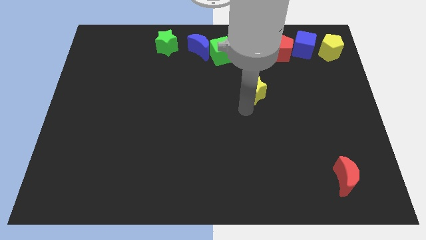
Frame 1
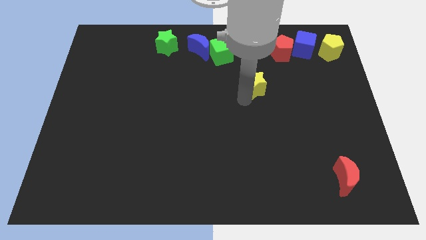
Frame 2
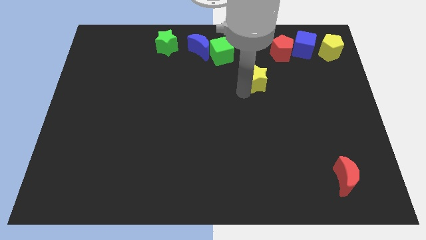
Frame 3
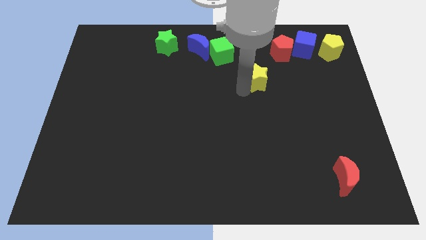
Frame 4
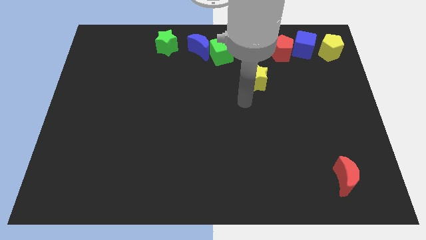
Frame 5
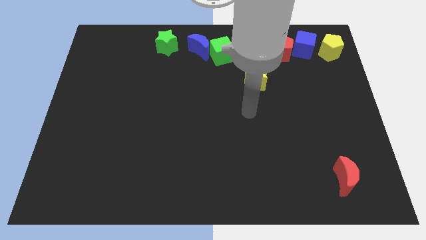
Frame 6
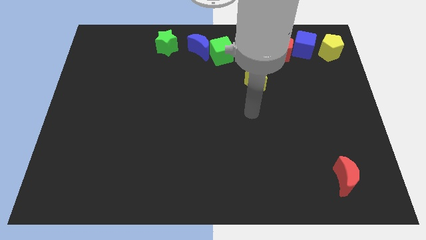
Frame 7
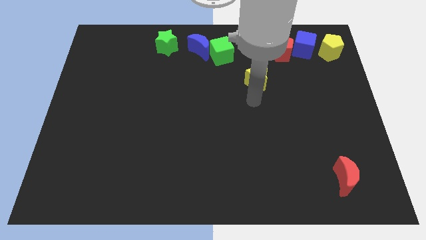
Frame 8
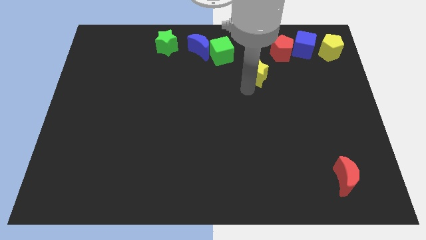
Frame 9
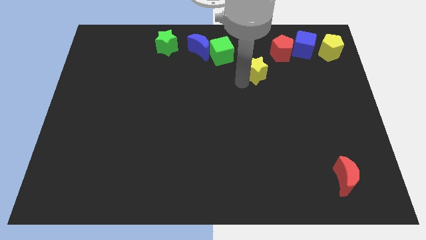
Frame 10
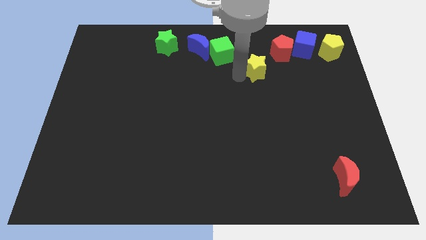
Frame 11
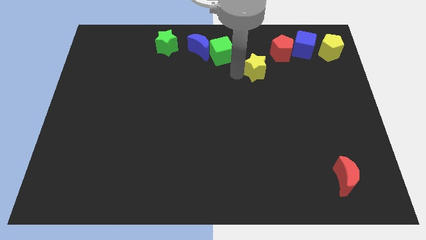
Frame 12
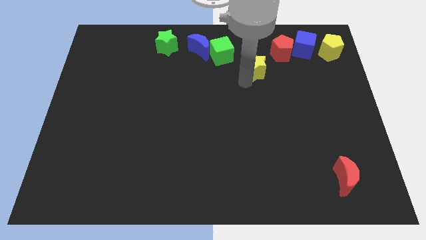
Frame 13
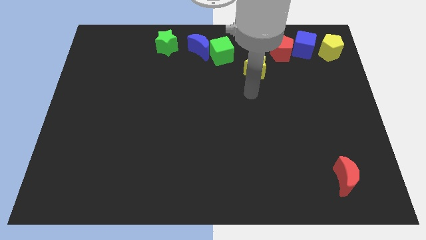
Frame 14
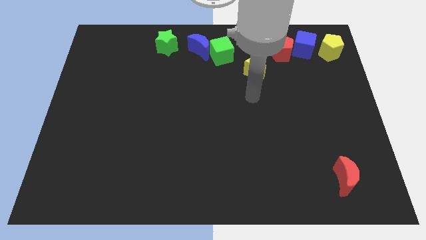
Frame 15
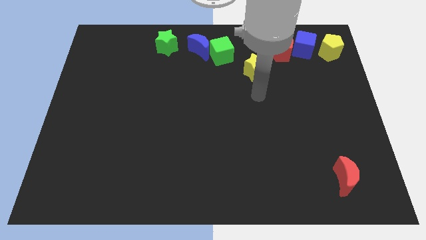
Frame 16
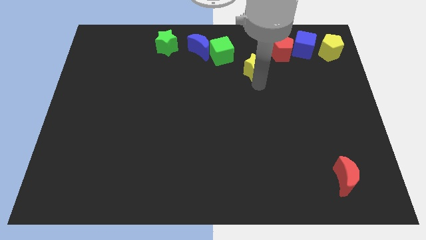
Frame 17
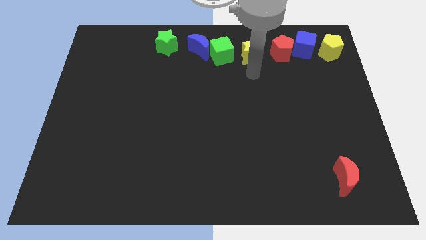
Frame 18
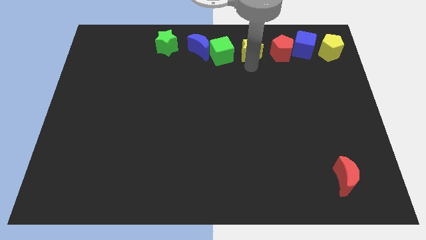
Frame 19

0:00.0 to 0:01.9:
place the yellow star between the red pentagon and green cube

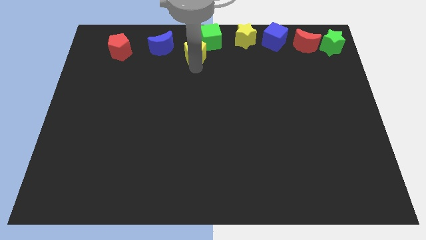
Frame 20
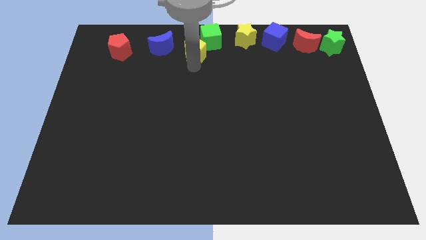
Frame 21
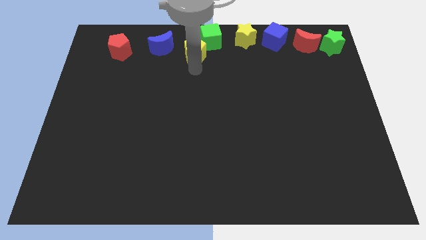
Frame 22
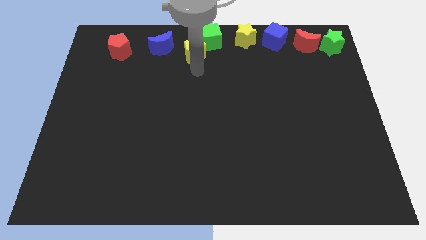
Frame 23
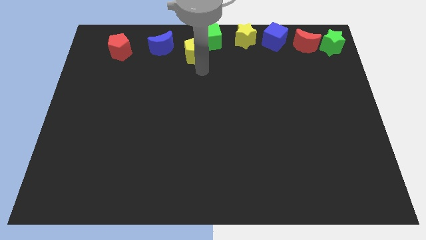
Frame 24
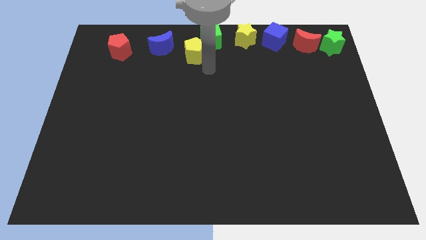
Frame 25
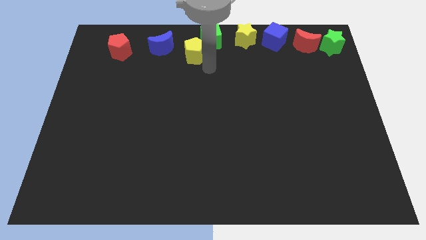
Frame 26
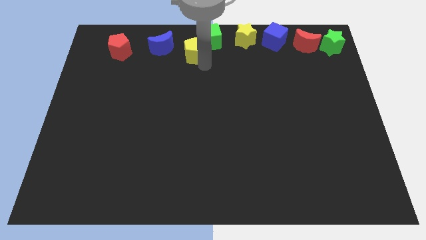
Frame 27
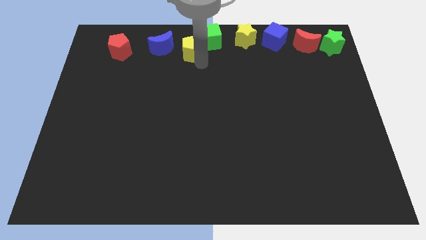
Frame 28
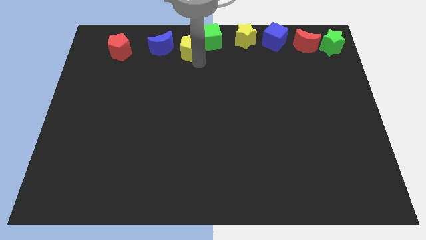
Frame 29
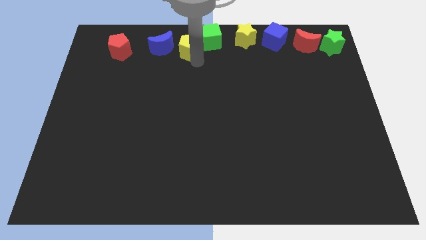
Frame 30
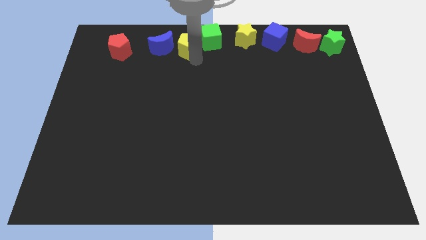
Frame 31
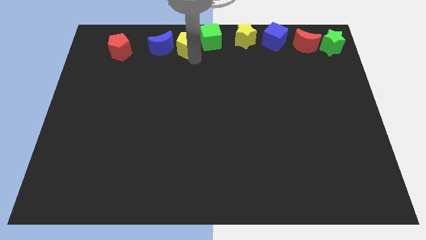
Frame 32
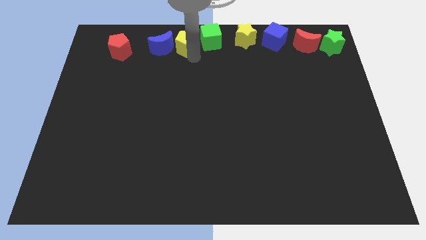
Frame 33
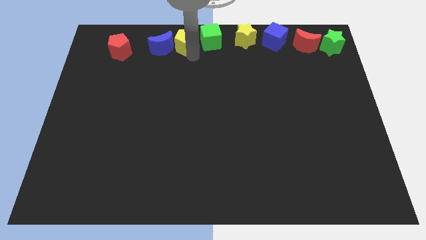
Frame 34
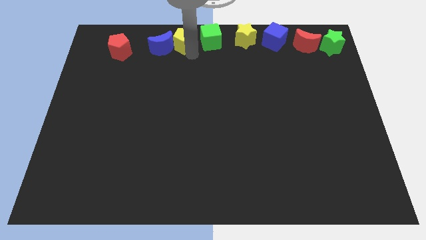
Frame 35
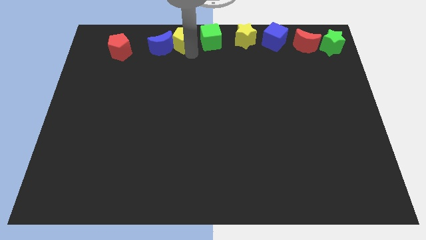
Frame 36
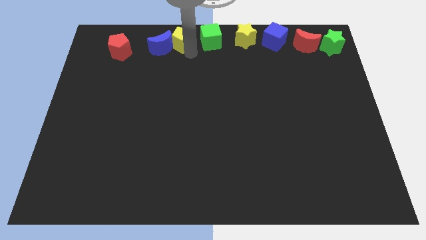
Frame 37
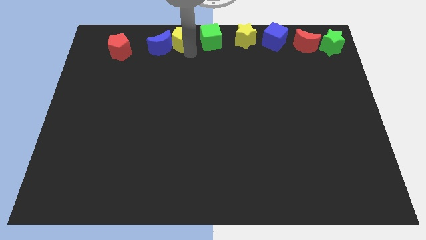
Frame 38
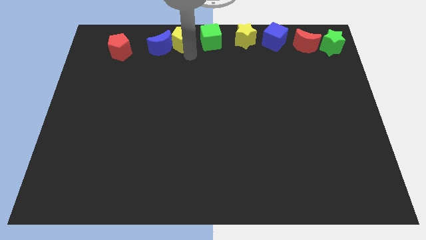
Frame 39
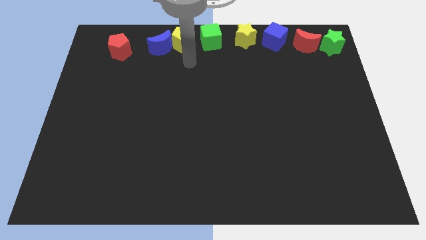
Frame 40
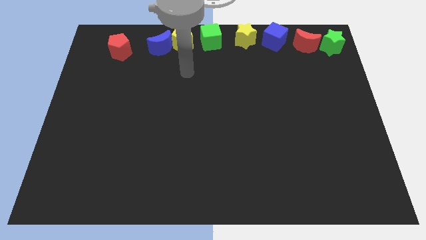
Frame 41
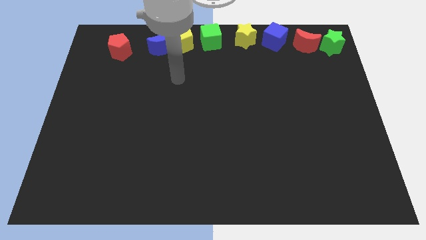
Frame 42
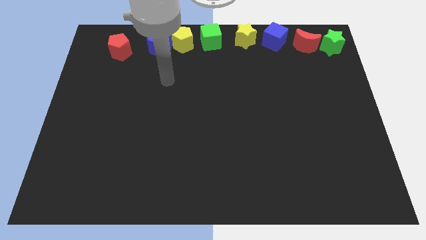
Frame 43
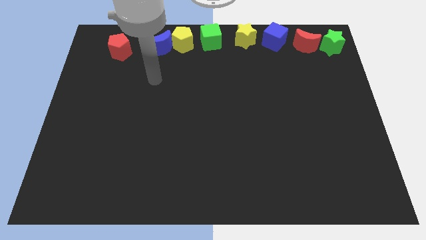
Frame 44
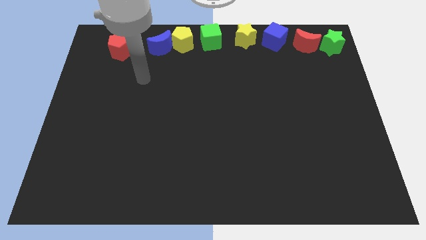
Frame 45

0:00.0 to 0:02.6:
place the yellow pentagon in between the green cube and the blue crescent

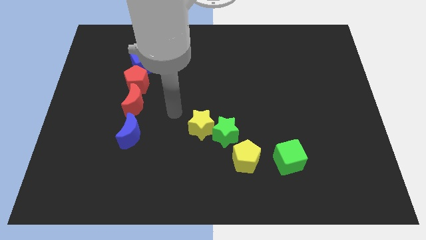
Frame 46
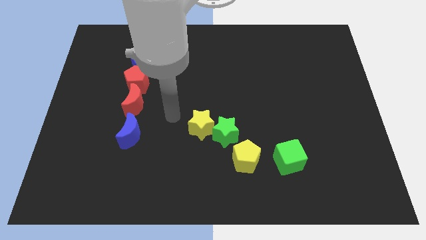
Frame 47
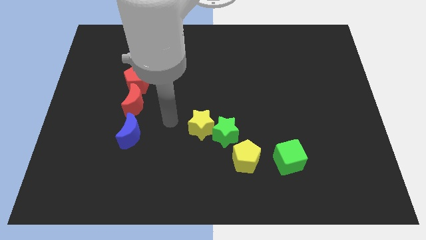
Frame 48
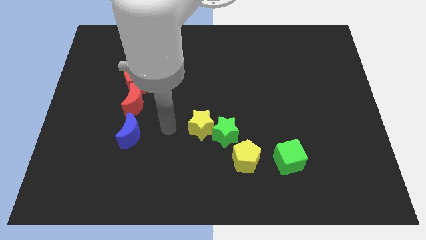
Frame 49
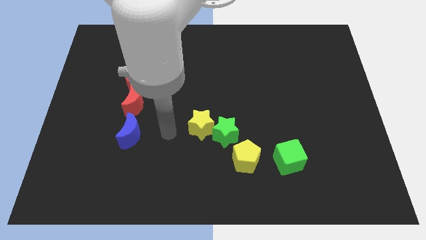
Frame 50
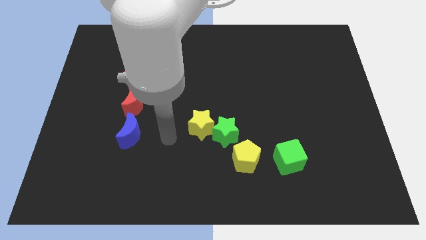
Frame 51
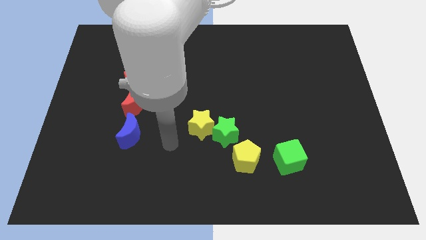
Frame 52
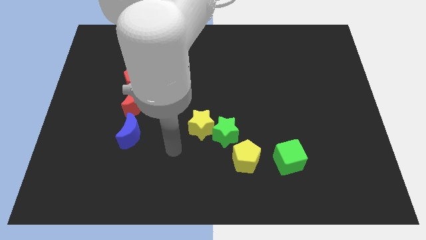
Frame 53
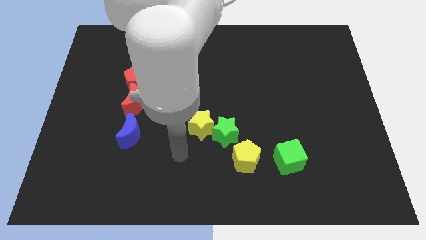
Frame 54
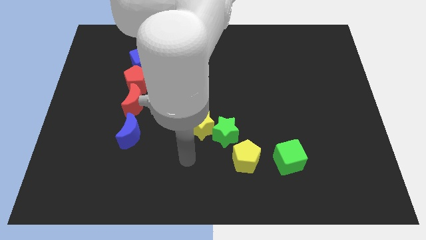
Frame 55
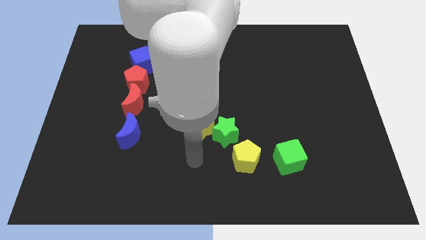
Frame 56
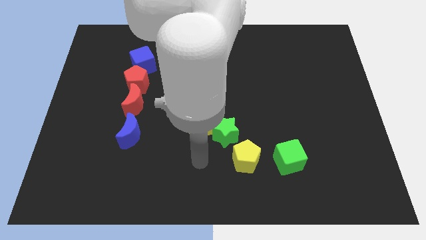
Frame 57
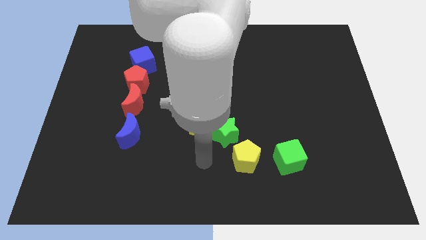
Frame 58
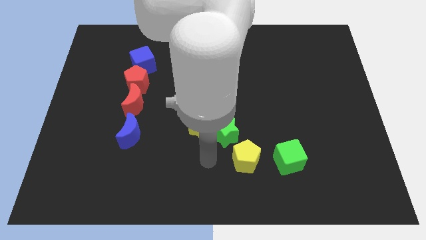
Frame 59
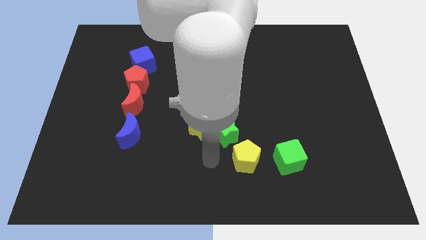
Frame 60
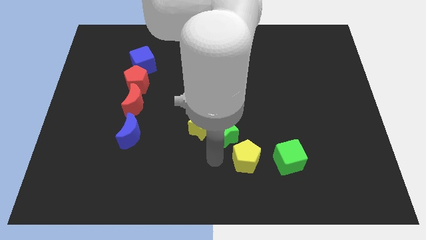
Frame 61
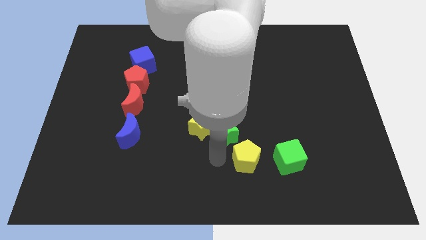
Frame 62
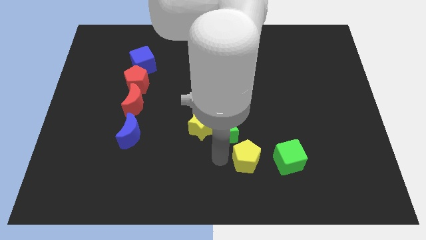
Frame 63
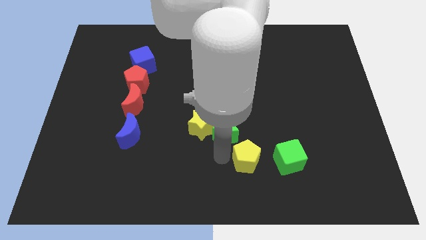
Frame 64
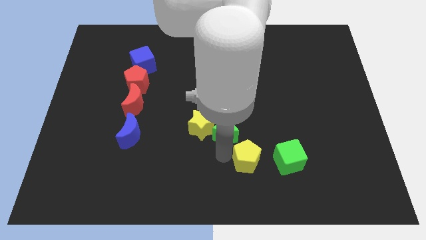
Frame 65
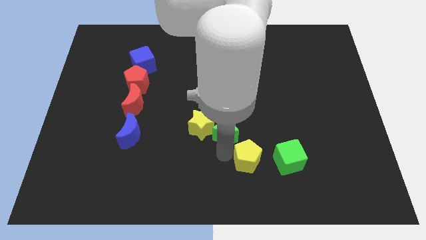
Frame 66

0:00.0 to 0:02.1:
tap the left side of the yellow pentagon

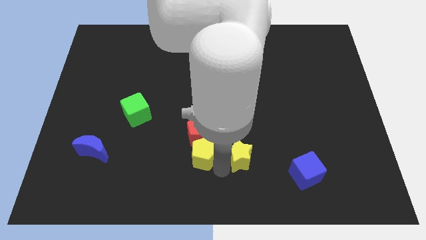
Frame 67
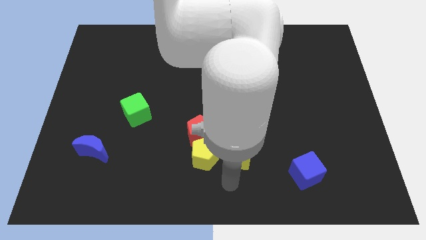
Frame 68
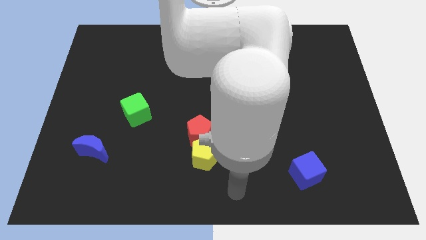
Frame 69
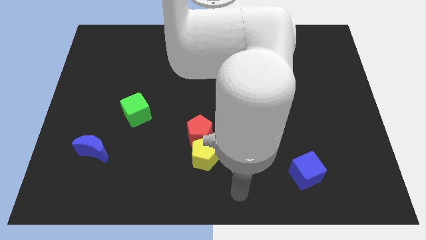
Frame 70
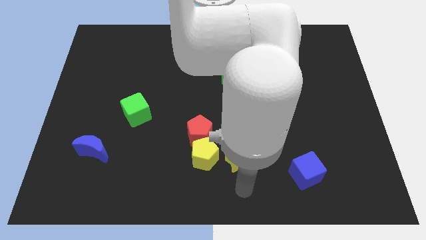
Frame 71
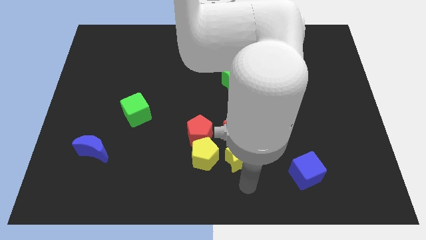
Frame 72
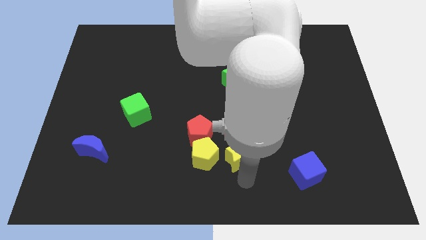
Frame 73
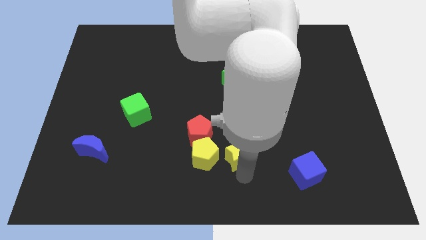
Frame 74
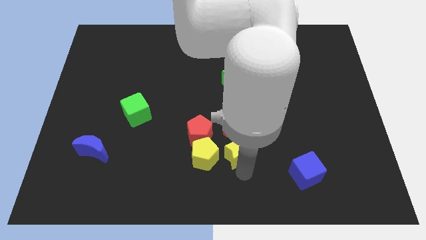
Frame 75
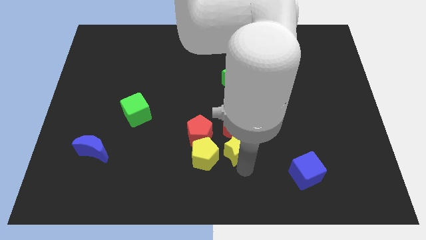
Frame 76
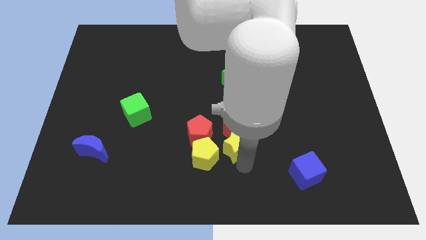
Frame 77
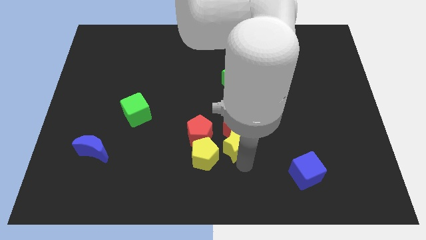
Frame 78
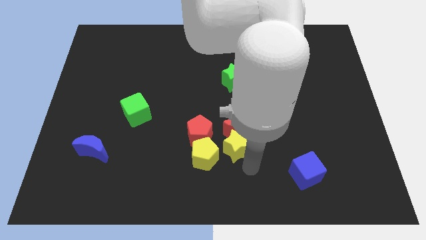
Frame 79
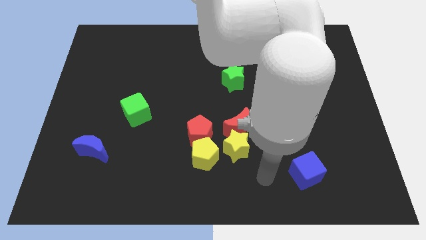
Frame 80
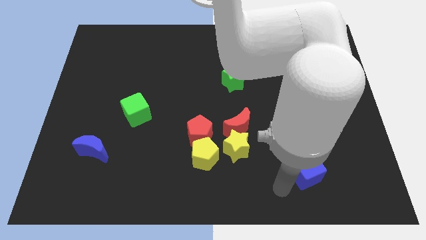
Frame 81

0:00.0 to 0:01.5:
put the yellow star underneath the red moon

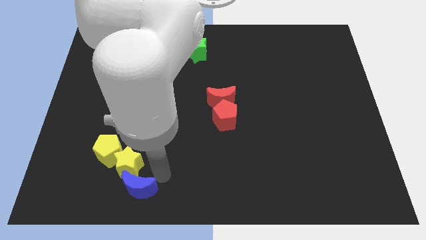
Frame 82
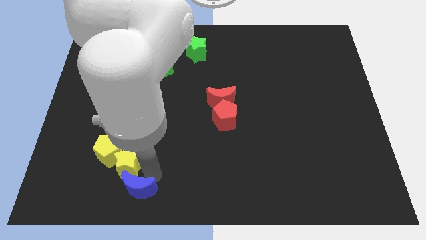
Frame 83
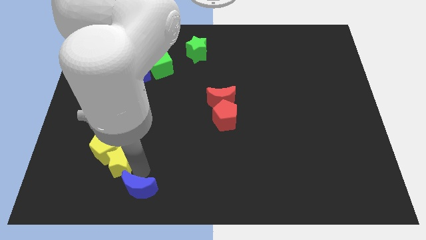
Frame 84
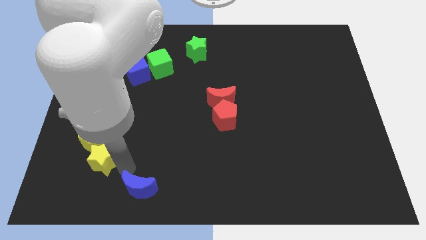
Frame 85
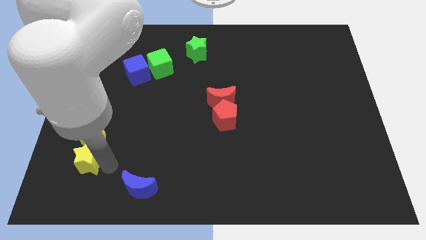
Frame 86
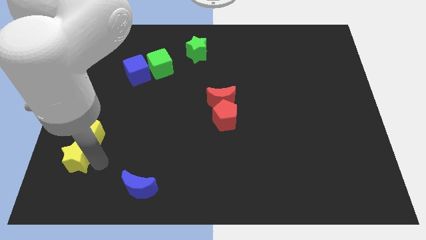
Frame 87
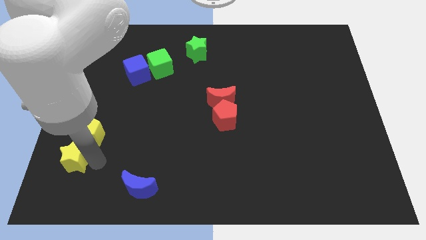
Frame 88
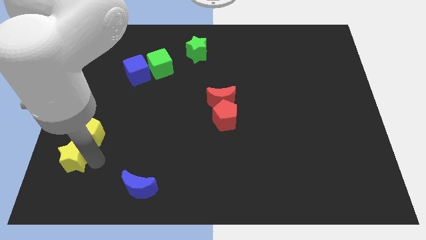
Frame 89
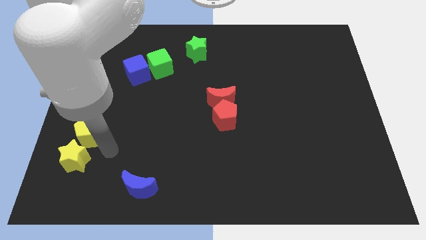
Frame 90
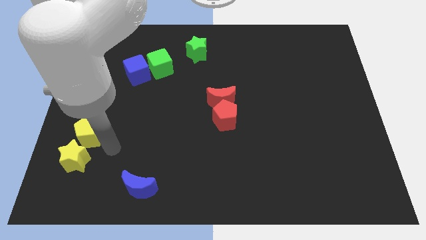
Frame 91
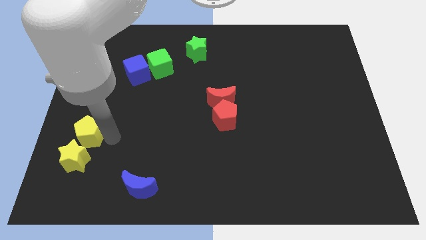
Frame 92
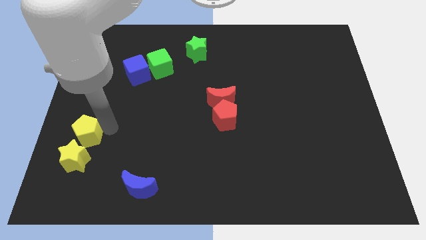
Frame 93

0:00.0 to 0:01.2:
push the yellow star down to the yellow pentagon
